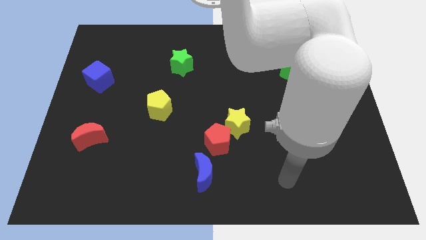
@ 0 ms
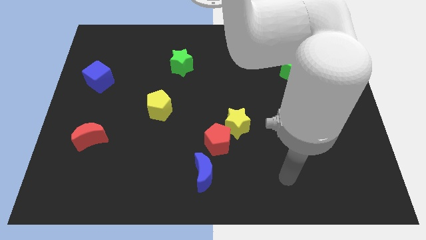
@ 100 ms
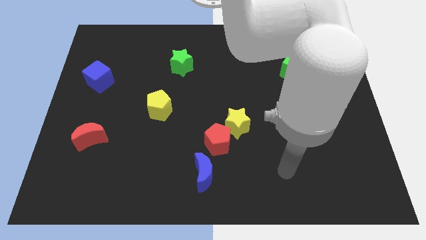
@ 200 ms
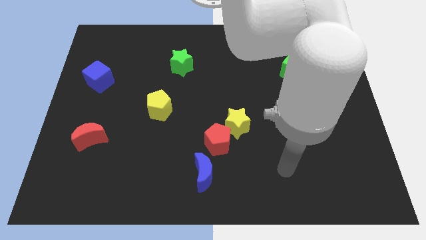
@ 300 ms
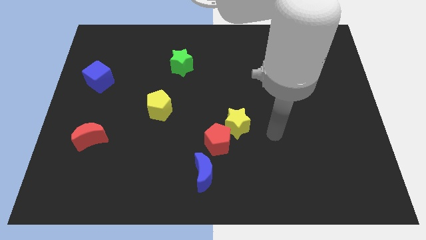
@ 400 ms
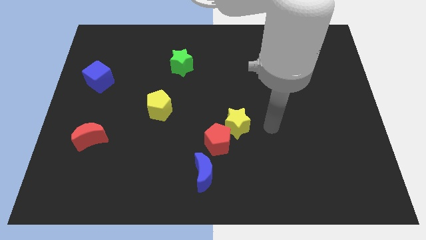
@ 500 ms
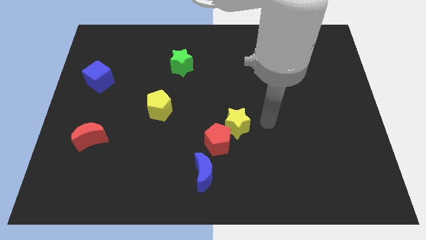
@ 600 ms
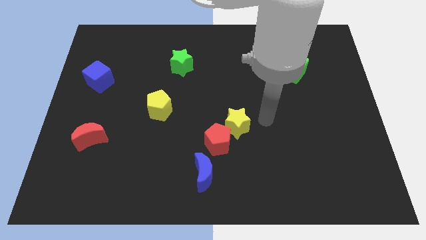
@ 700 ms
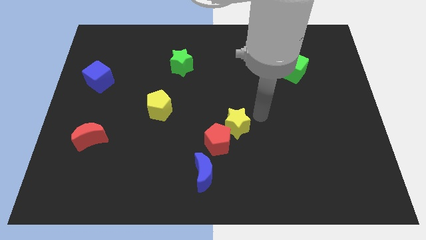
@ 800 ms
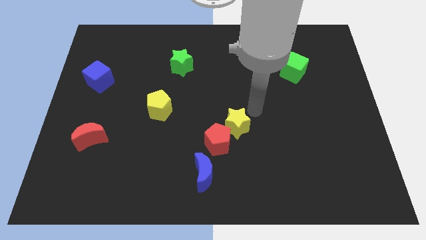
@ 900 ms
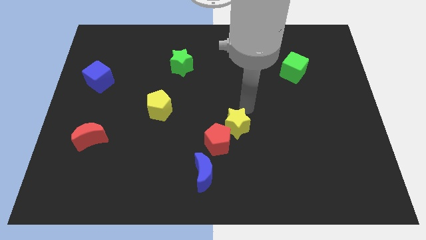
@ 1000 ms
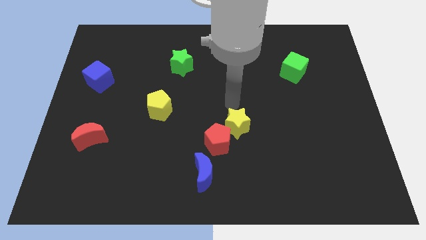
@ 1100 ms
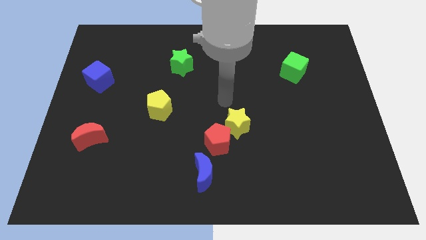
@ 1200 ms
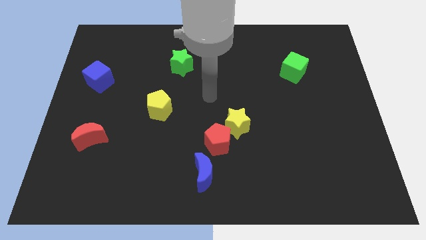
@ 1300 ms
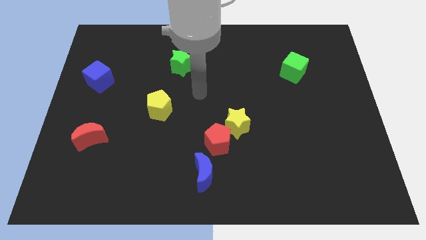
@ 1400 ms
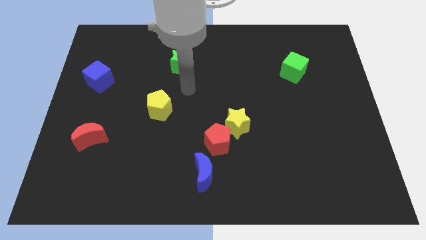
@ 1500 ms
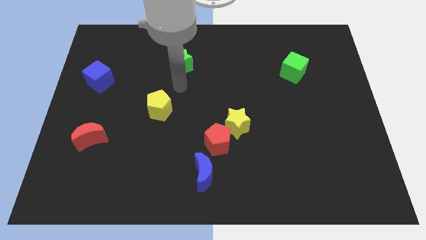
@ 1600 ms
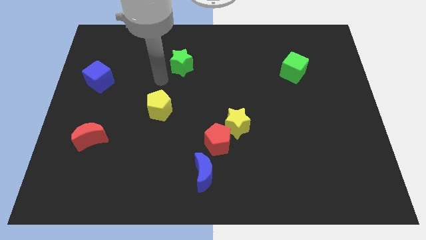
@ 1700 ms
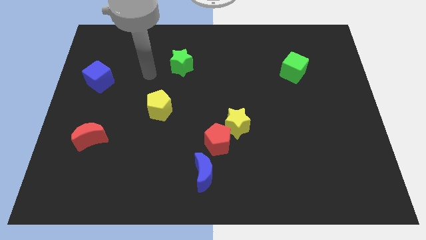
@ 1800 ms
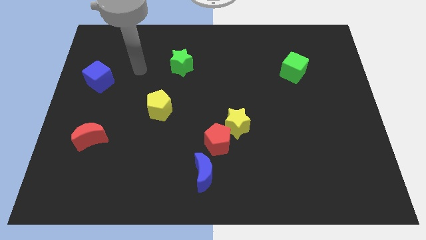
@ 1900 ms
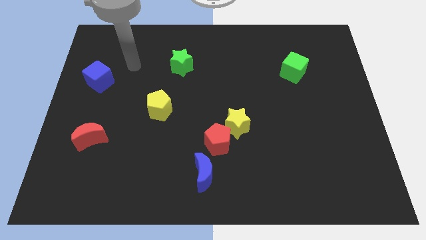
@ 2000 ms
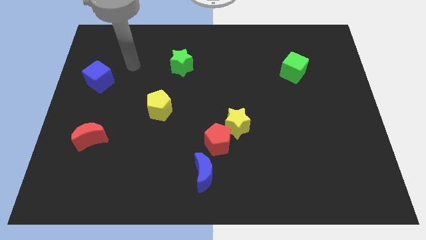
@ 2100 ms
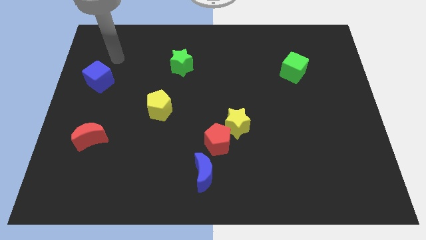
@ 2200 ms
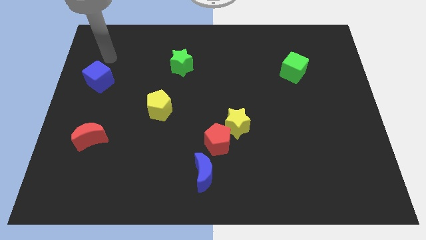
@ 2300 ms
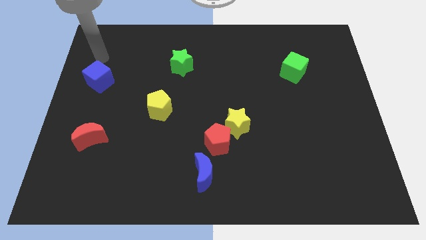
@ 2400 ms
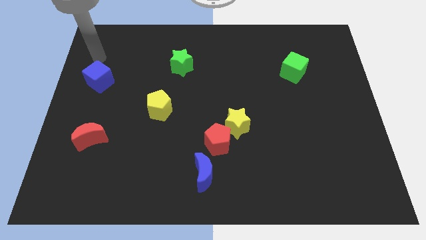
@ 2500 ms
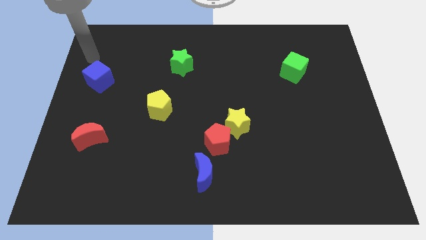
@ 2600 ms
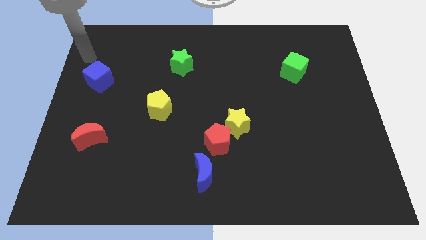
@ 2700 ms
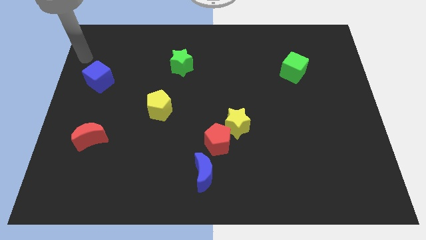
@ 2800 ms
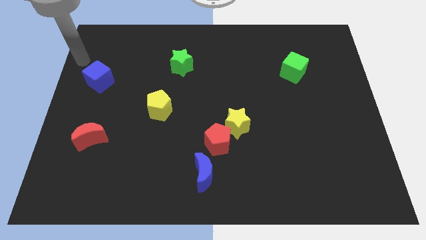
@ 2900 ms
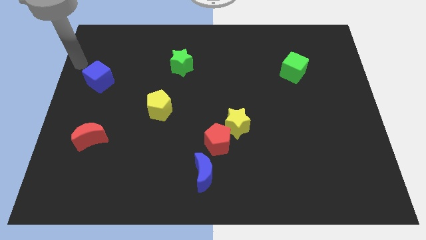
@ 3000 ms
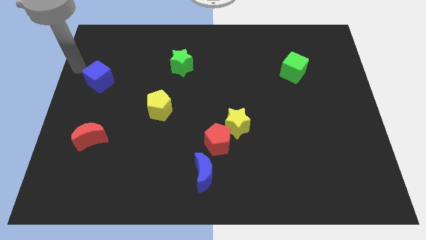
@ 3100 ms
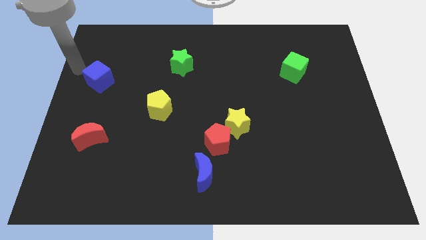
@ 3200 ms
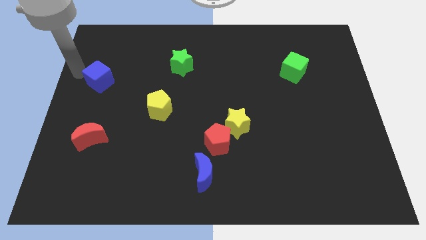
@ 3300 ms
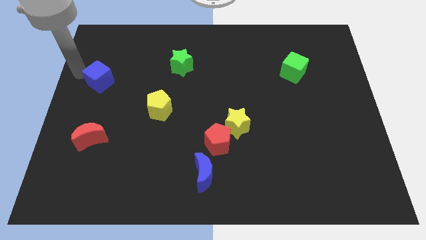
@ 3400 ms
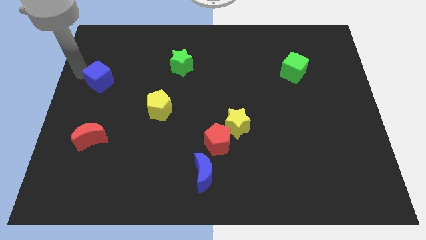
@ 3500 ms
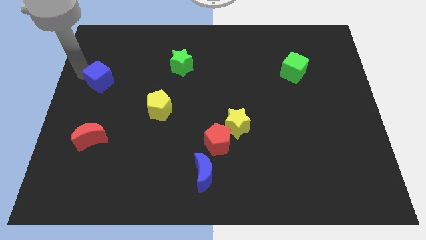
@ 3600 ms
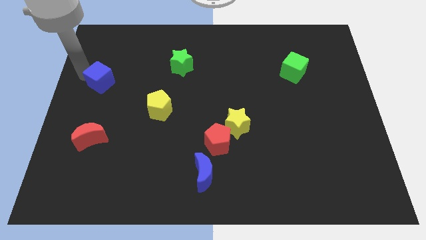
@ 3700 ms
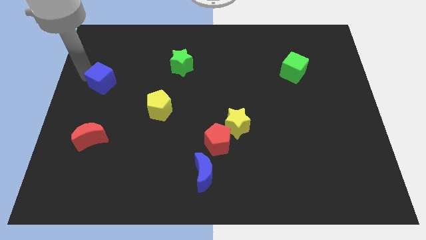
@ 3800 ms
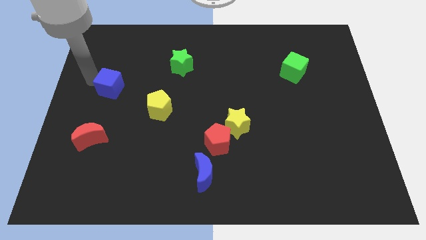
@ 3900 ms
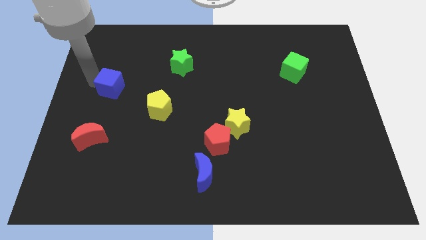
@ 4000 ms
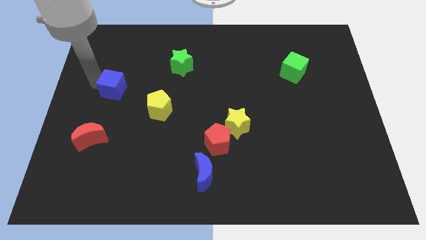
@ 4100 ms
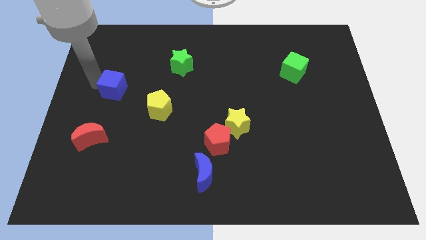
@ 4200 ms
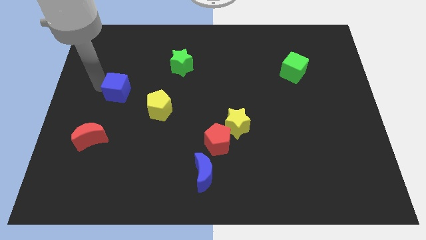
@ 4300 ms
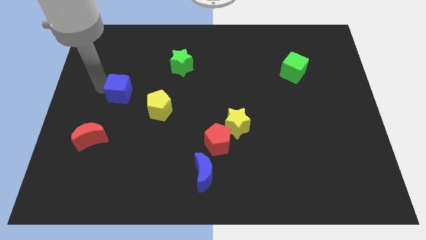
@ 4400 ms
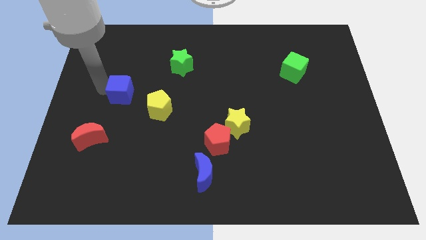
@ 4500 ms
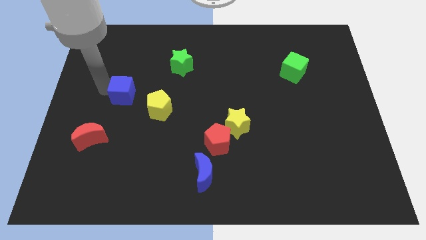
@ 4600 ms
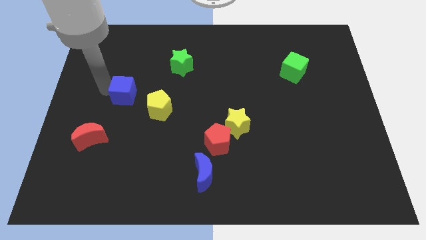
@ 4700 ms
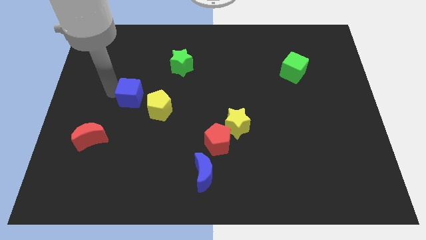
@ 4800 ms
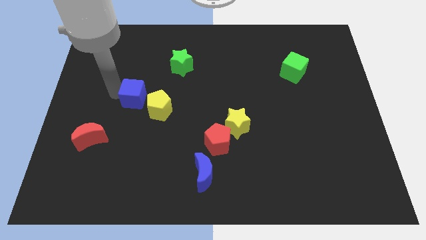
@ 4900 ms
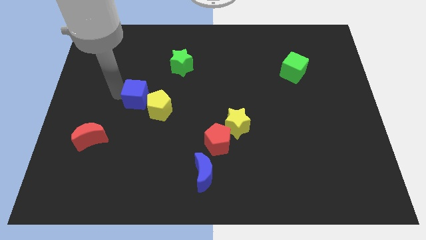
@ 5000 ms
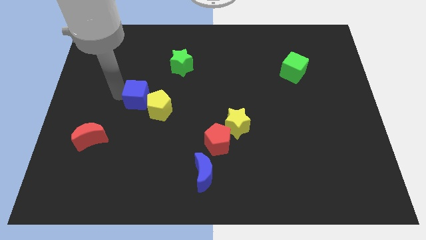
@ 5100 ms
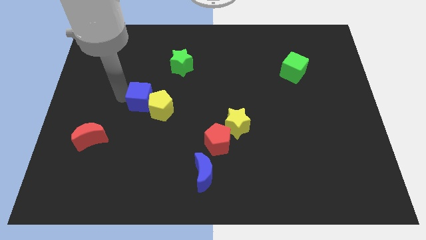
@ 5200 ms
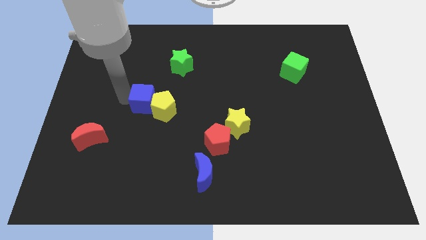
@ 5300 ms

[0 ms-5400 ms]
slide the blue cube close to the yellow pentagon

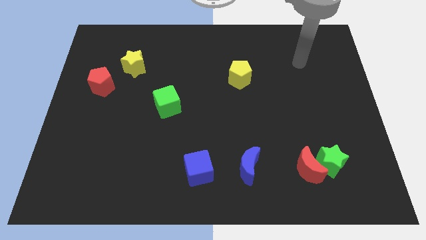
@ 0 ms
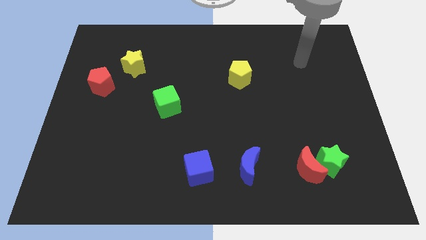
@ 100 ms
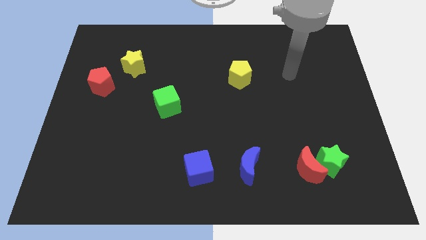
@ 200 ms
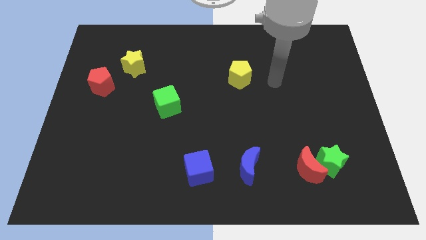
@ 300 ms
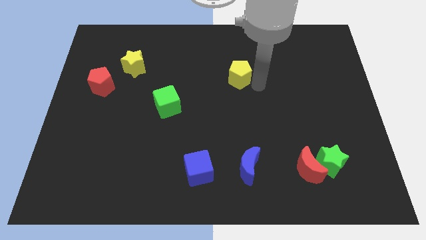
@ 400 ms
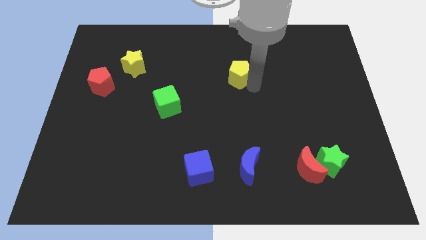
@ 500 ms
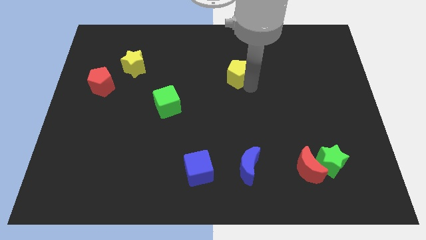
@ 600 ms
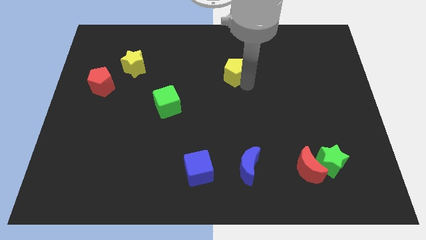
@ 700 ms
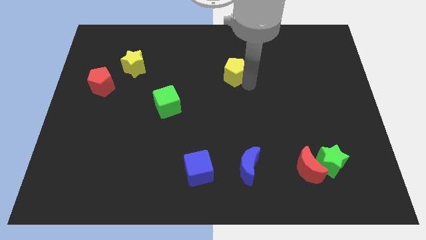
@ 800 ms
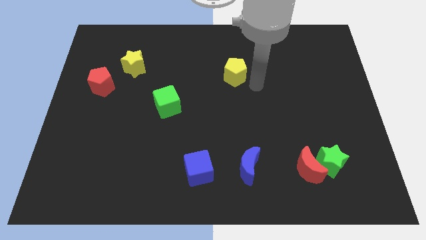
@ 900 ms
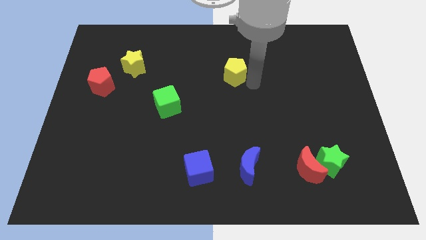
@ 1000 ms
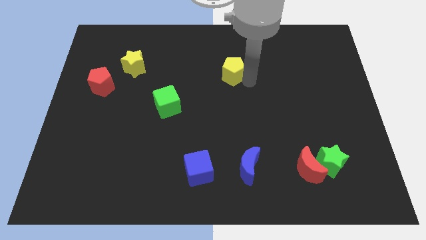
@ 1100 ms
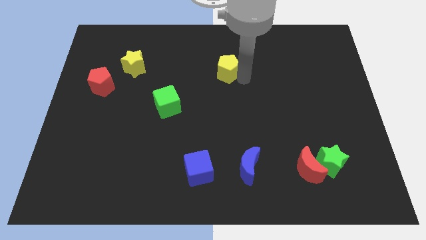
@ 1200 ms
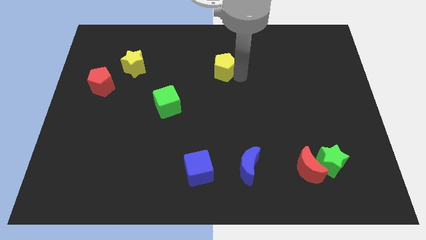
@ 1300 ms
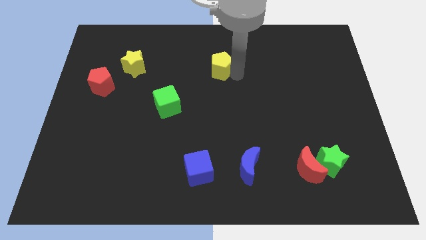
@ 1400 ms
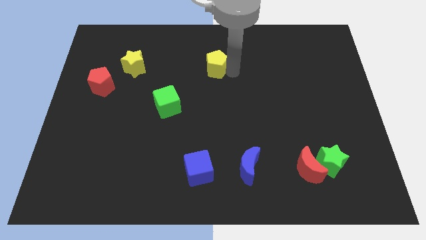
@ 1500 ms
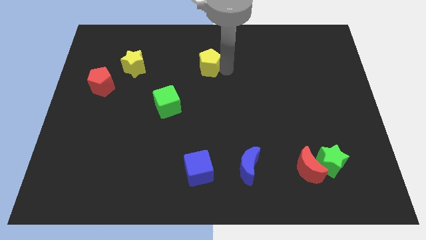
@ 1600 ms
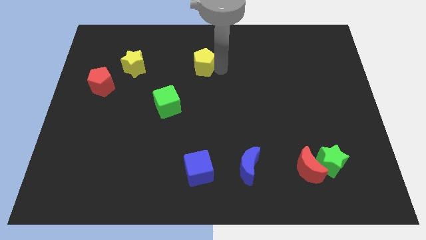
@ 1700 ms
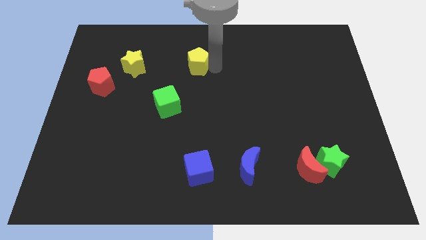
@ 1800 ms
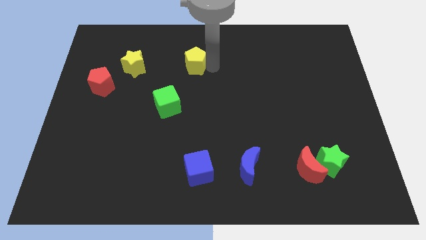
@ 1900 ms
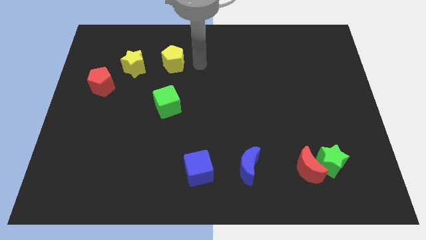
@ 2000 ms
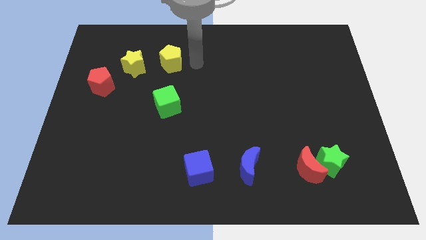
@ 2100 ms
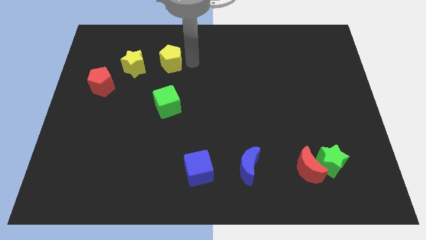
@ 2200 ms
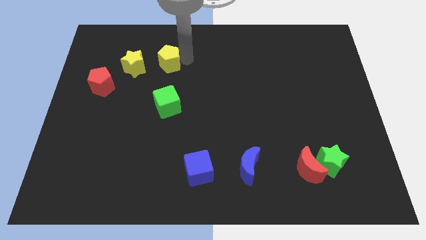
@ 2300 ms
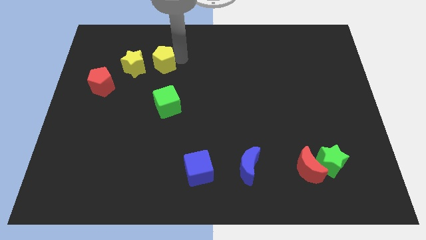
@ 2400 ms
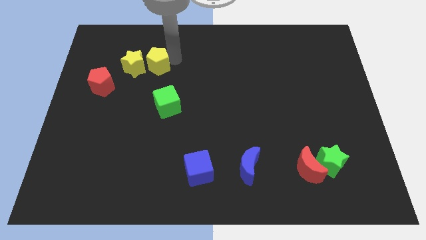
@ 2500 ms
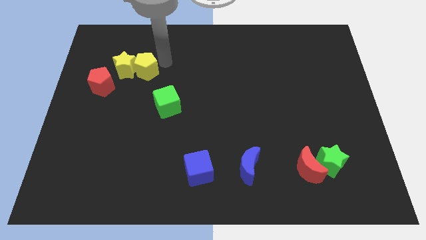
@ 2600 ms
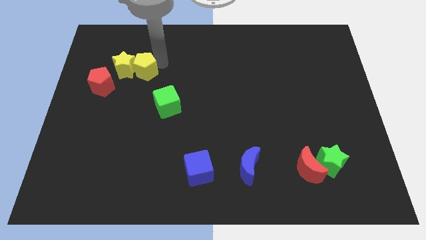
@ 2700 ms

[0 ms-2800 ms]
put the yellow pentagon to the yellow star

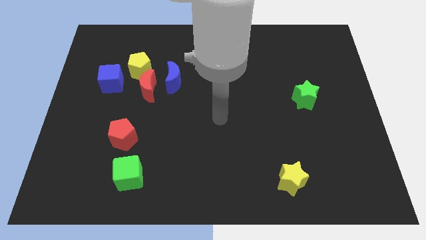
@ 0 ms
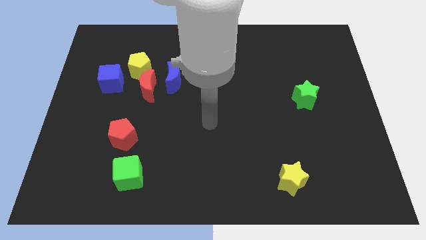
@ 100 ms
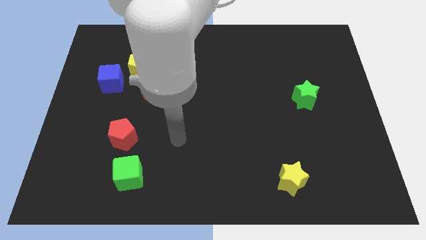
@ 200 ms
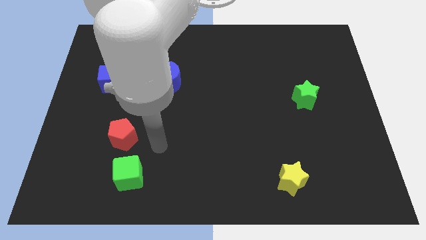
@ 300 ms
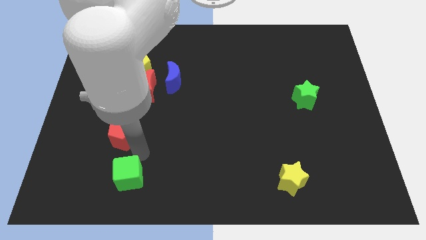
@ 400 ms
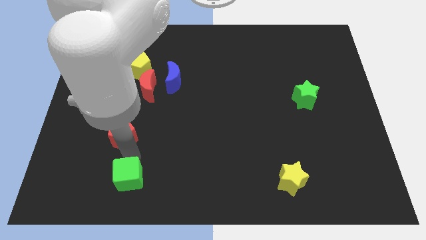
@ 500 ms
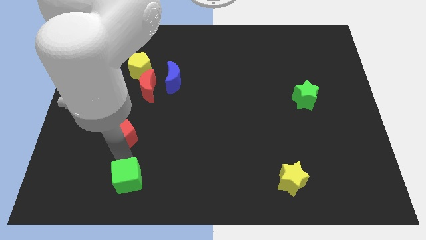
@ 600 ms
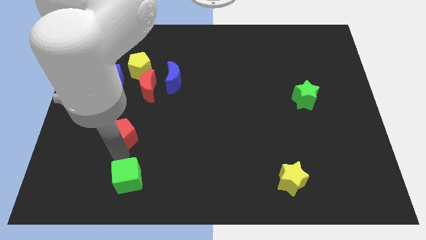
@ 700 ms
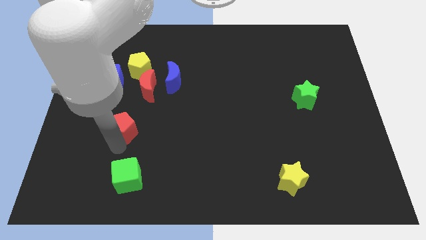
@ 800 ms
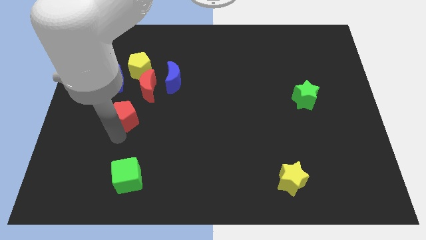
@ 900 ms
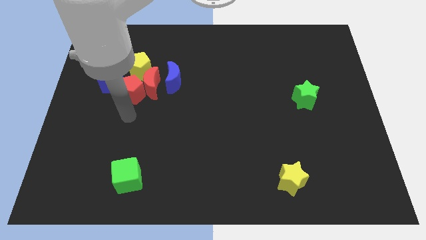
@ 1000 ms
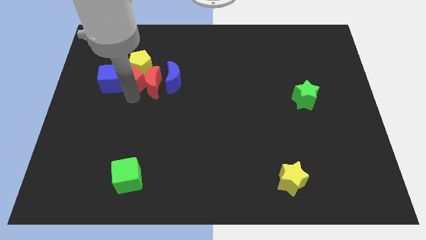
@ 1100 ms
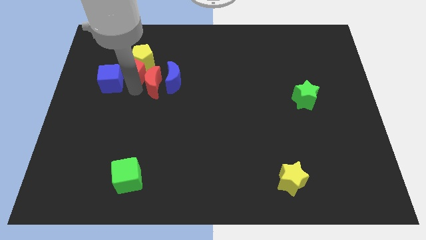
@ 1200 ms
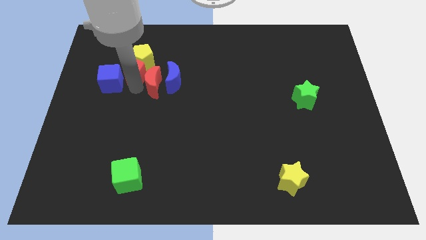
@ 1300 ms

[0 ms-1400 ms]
move the red pentagon next to the yellow pentagon
